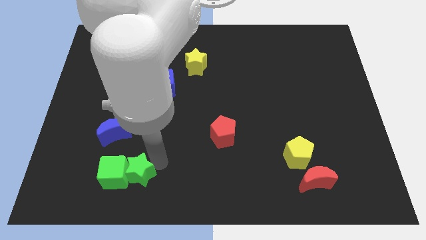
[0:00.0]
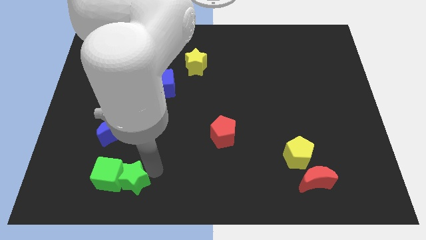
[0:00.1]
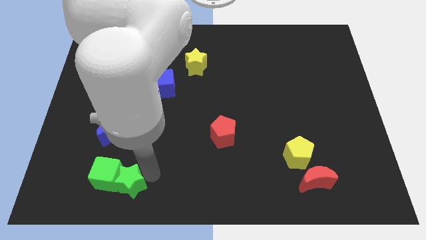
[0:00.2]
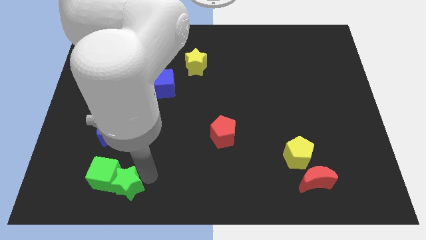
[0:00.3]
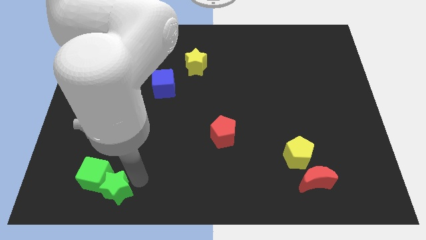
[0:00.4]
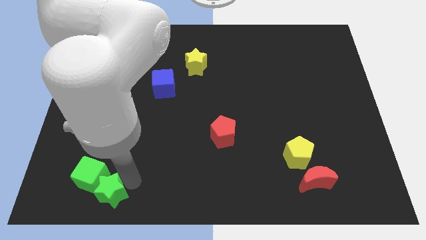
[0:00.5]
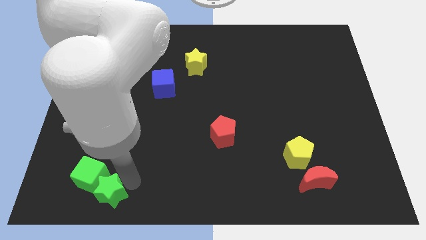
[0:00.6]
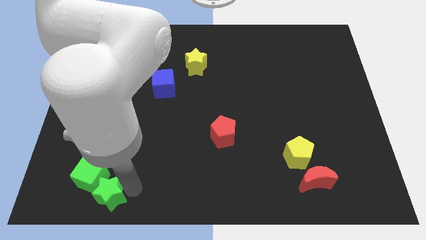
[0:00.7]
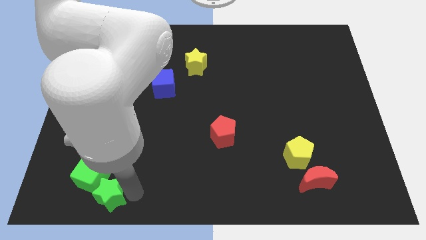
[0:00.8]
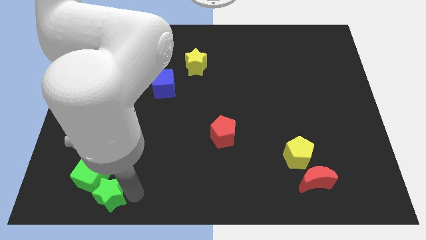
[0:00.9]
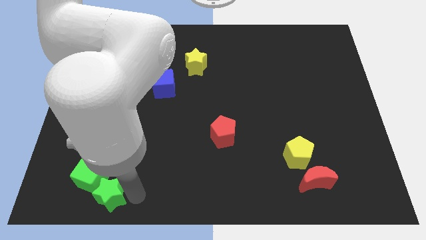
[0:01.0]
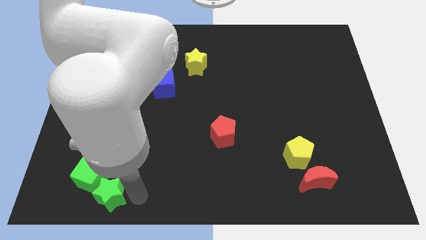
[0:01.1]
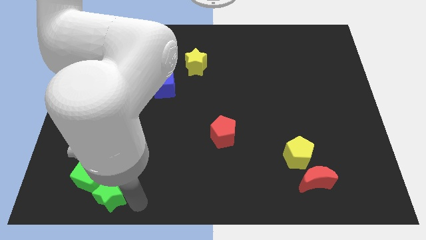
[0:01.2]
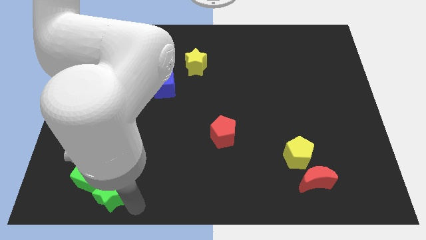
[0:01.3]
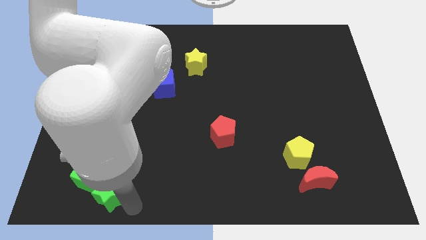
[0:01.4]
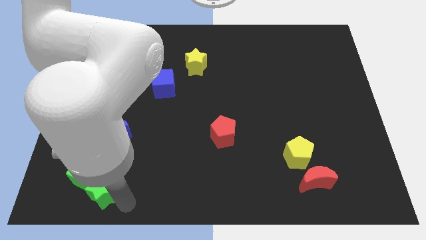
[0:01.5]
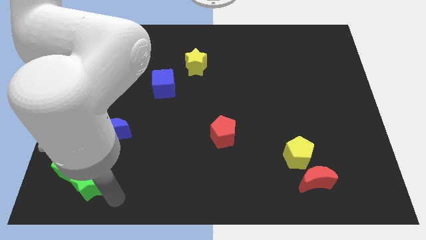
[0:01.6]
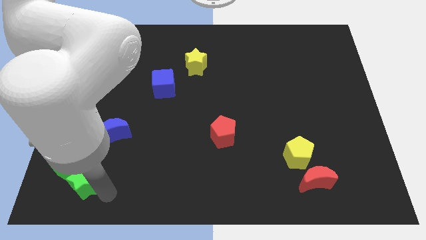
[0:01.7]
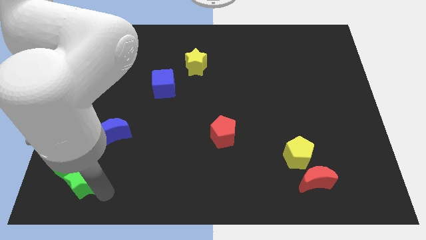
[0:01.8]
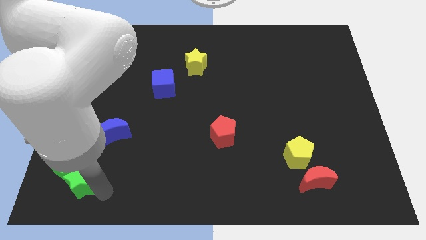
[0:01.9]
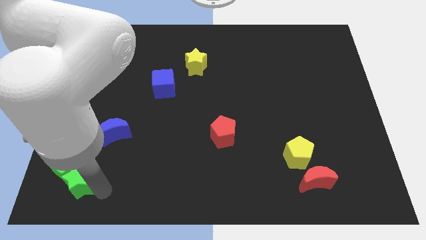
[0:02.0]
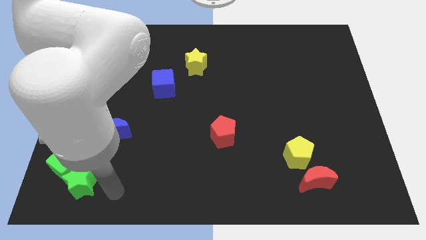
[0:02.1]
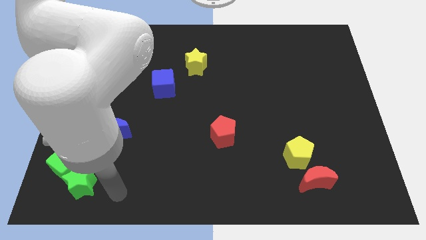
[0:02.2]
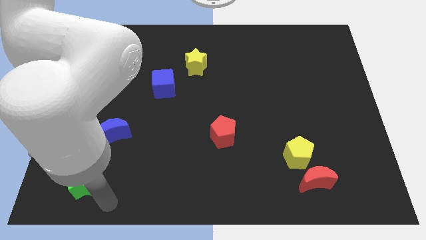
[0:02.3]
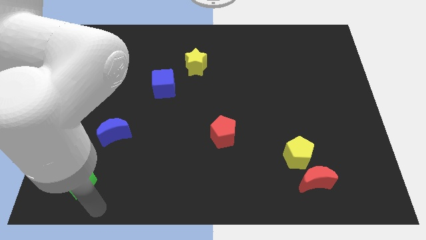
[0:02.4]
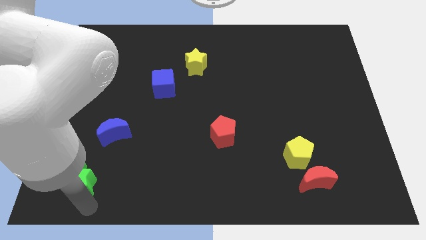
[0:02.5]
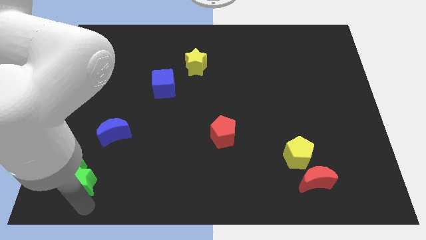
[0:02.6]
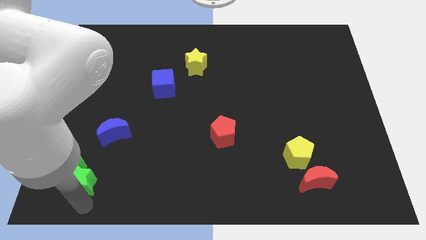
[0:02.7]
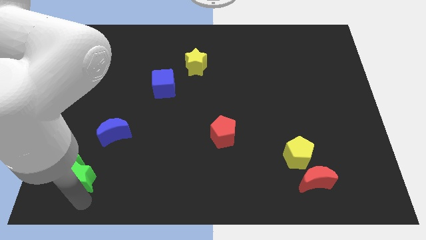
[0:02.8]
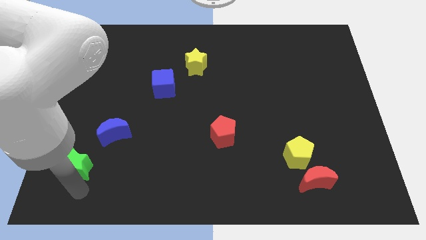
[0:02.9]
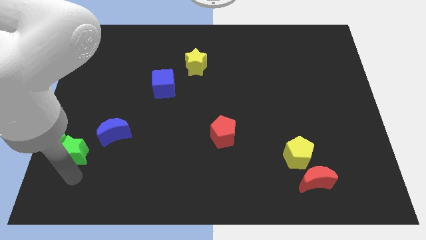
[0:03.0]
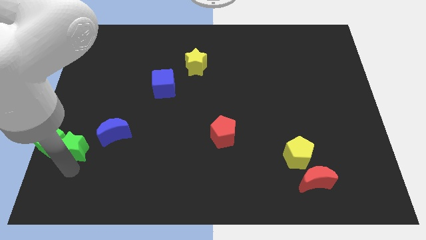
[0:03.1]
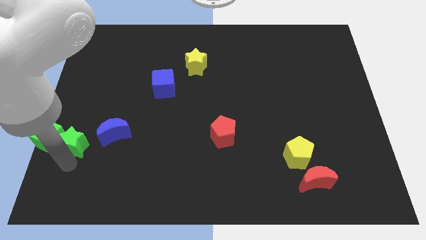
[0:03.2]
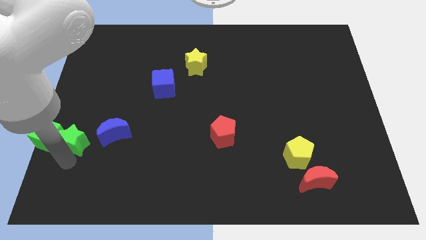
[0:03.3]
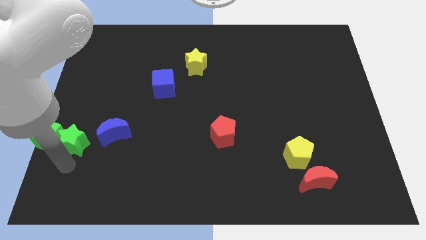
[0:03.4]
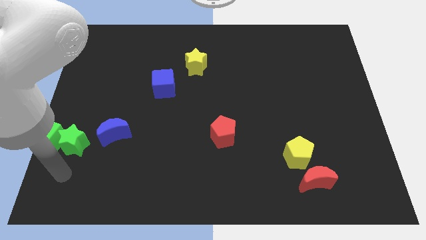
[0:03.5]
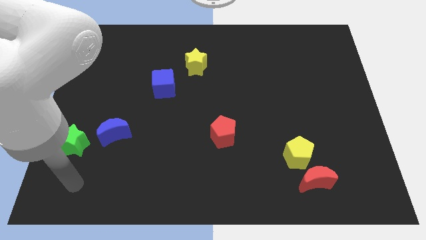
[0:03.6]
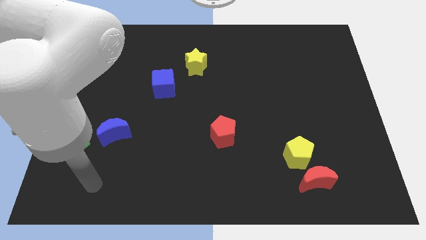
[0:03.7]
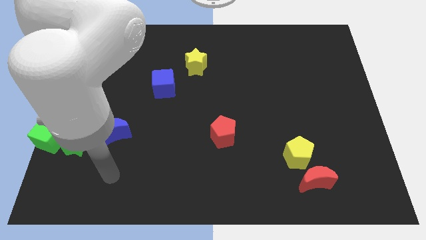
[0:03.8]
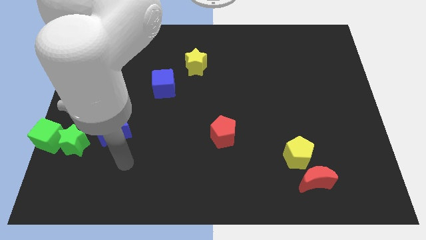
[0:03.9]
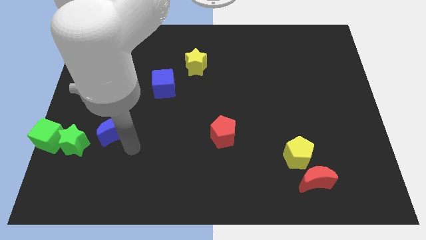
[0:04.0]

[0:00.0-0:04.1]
push the green star to the left of the blue moon

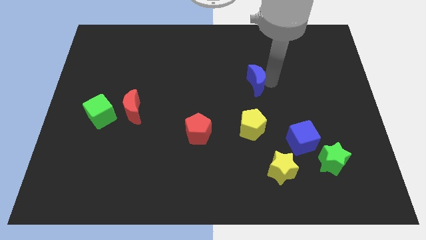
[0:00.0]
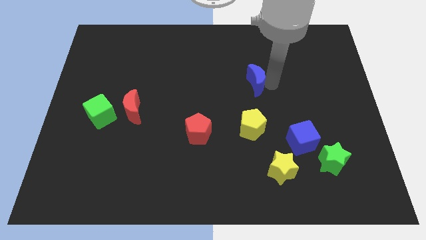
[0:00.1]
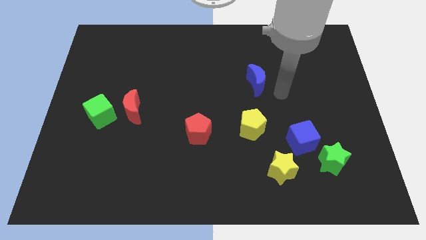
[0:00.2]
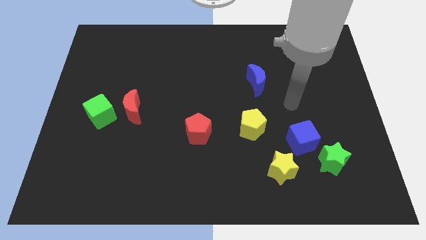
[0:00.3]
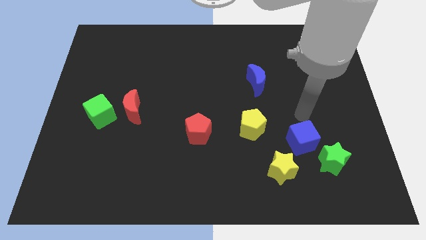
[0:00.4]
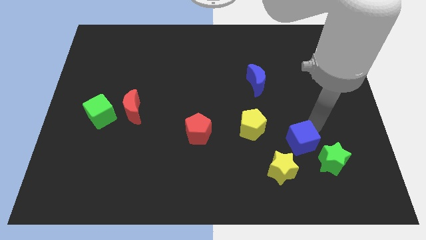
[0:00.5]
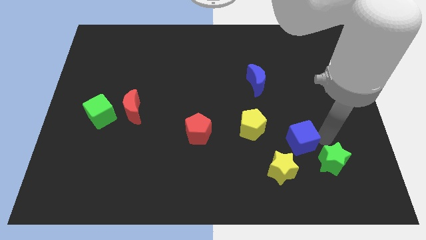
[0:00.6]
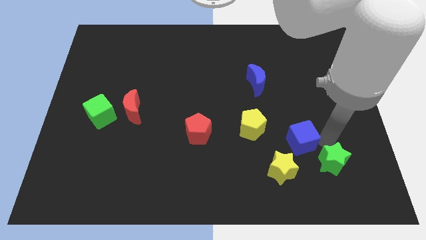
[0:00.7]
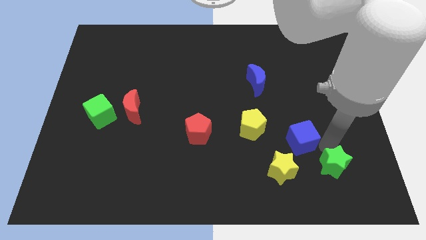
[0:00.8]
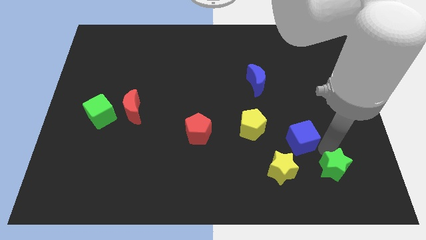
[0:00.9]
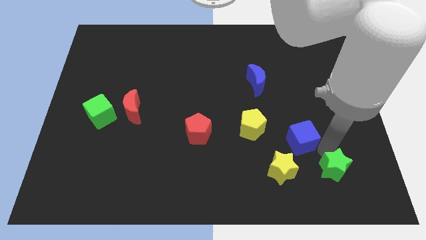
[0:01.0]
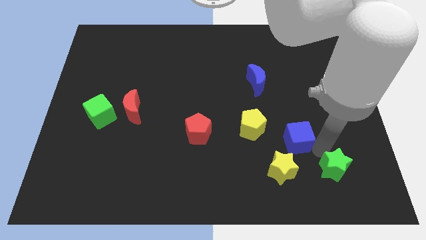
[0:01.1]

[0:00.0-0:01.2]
move the green star slightly to the bottom

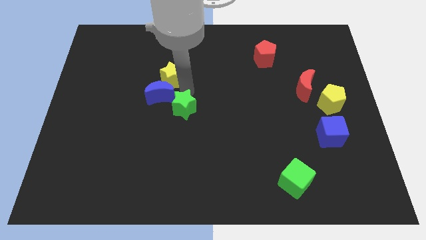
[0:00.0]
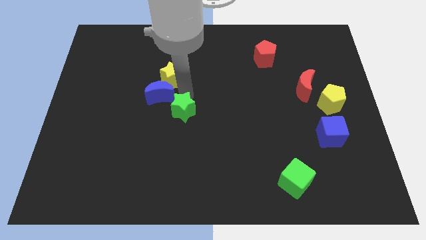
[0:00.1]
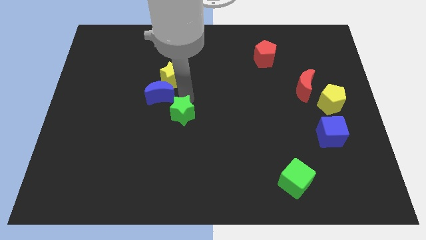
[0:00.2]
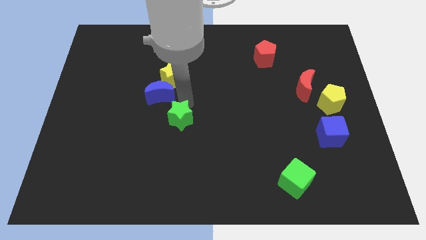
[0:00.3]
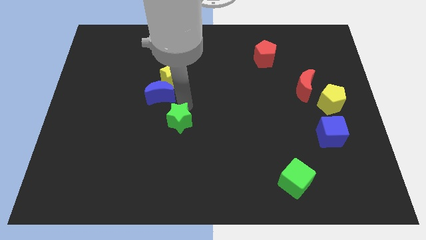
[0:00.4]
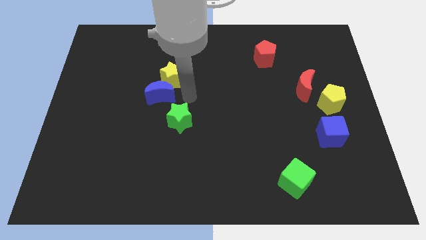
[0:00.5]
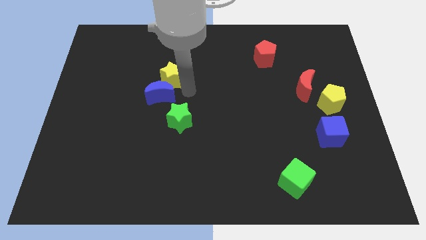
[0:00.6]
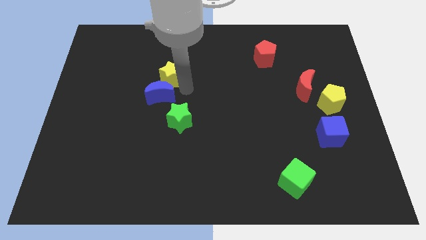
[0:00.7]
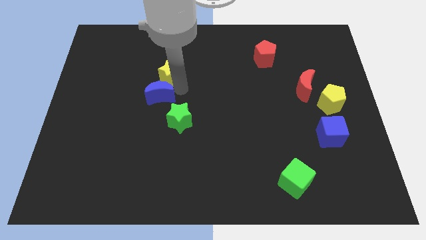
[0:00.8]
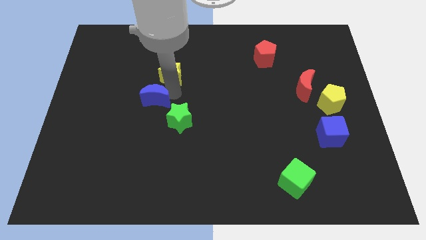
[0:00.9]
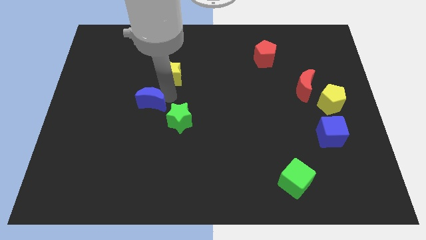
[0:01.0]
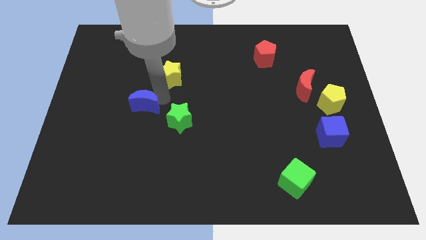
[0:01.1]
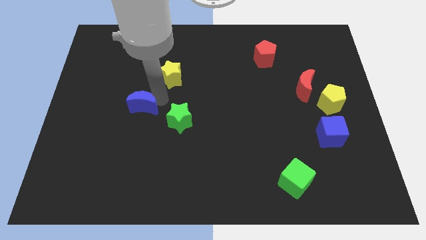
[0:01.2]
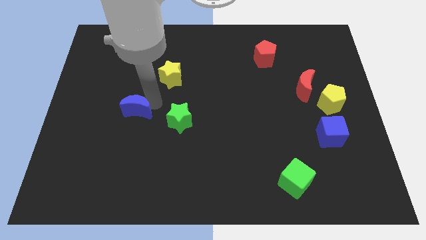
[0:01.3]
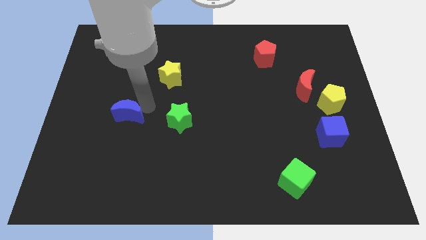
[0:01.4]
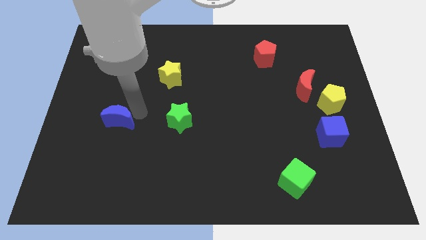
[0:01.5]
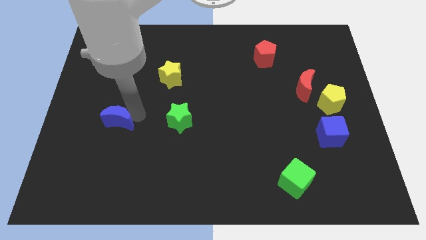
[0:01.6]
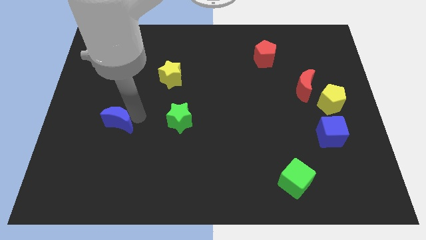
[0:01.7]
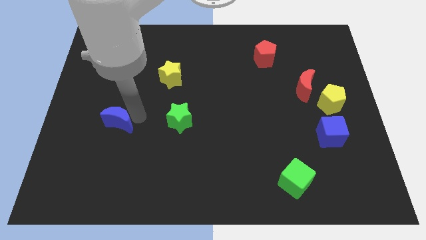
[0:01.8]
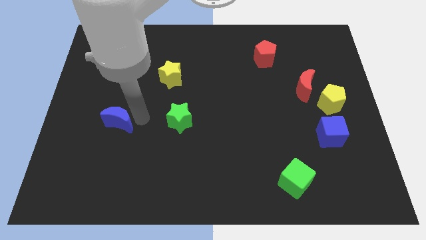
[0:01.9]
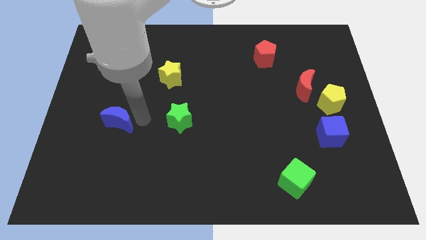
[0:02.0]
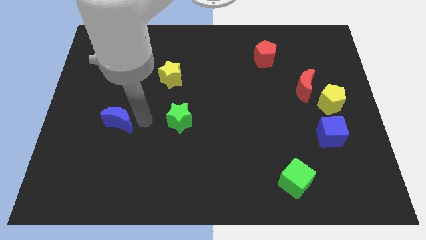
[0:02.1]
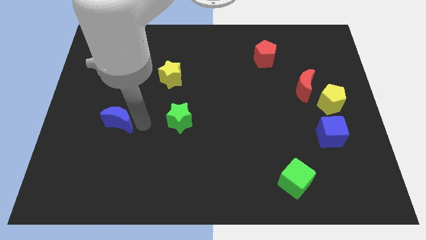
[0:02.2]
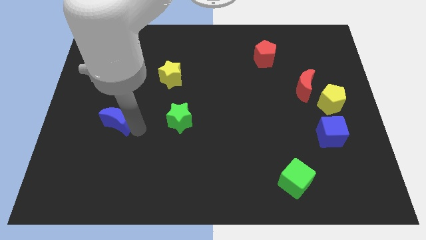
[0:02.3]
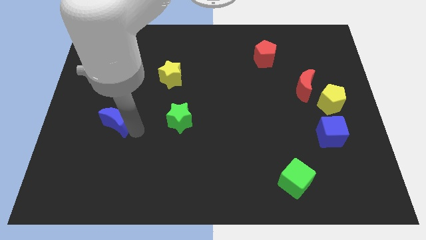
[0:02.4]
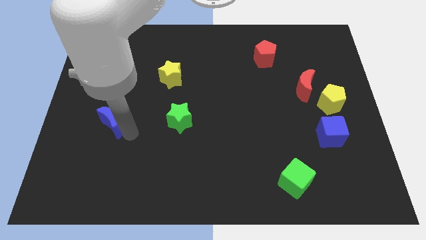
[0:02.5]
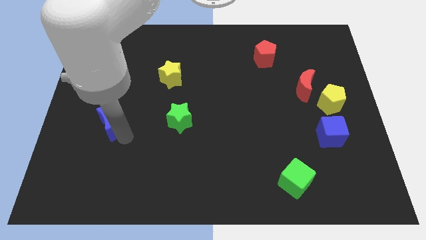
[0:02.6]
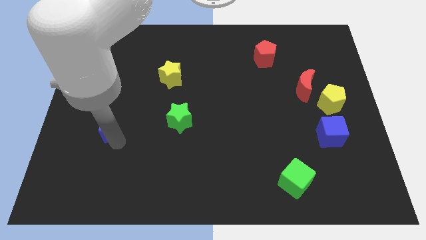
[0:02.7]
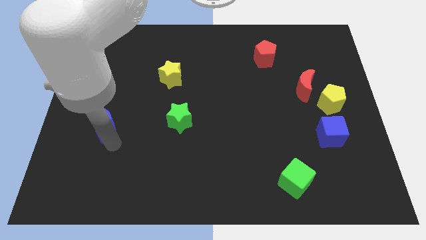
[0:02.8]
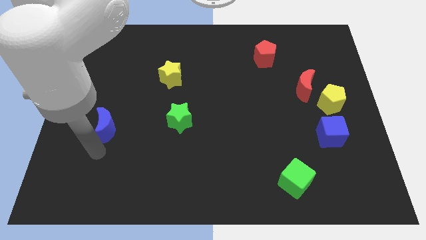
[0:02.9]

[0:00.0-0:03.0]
move the blue crescent to the left of the green star horizontally

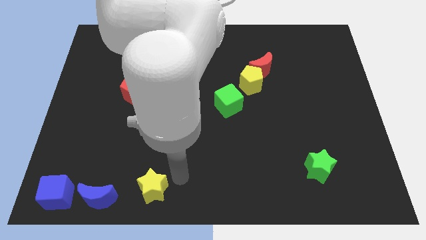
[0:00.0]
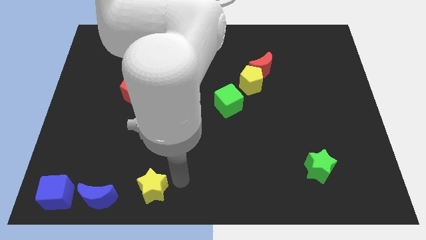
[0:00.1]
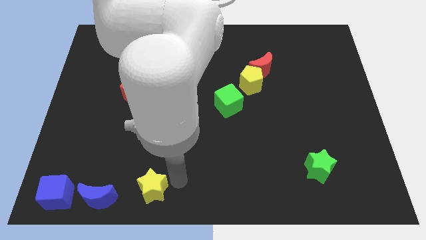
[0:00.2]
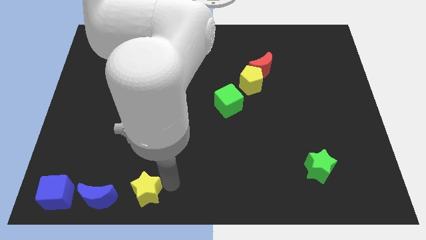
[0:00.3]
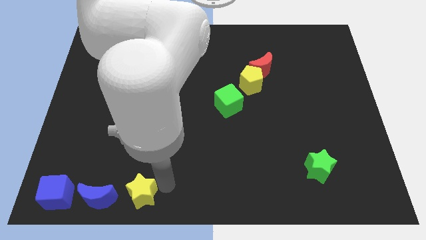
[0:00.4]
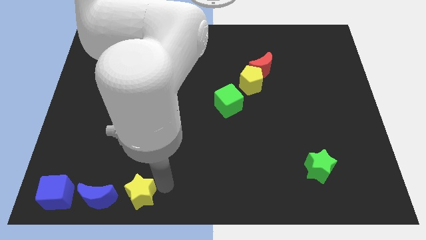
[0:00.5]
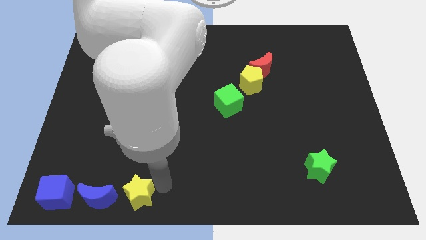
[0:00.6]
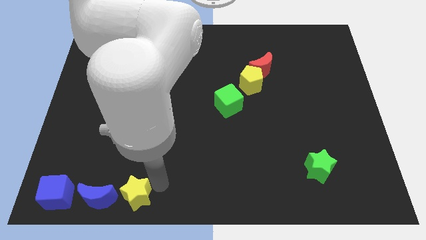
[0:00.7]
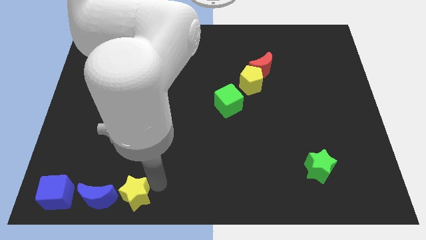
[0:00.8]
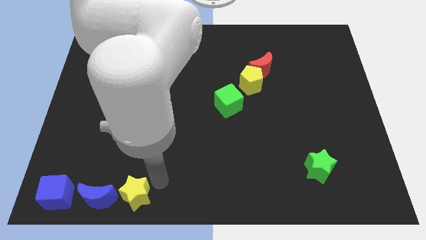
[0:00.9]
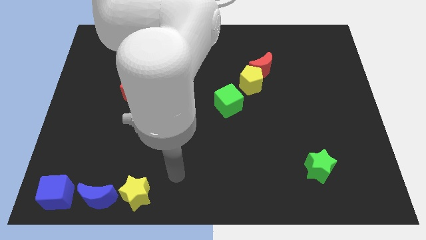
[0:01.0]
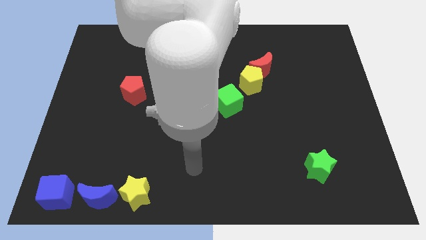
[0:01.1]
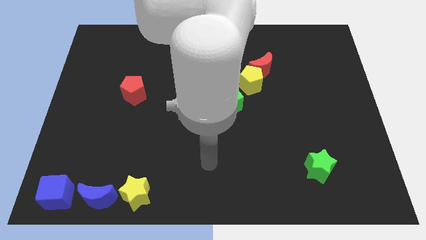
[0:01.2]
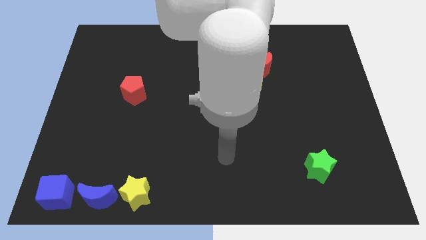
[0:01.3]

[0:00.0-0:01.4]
place yellow star beside blue crescent
